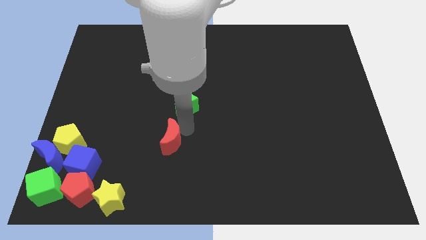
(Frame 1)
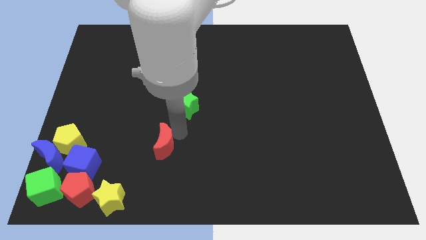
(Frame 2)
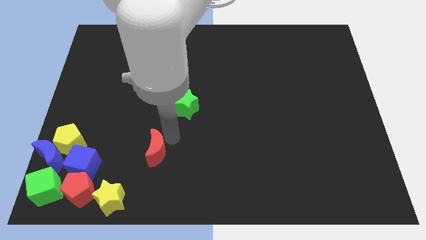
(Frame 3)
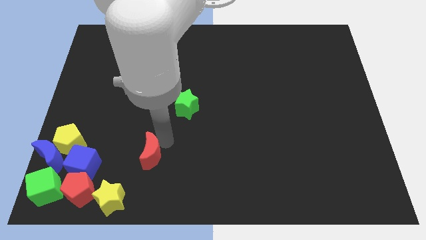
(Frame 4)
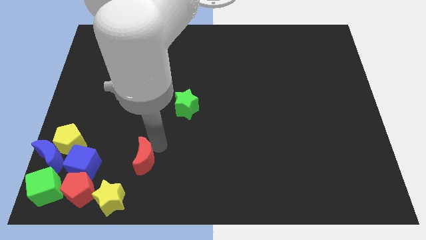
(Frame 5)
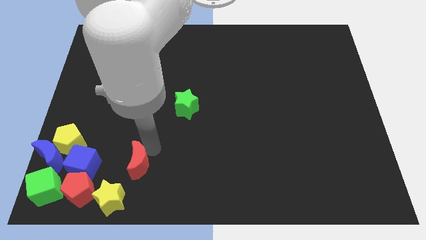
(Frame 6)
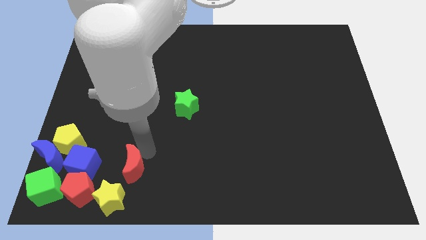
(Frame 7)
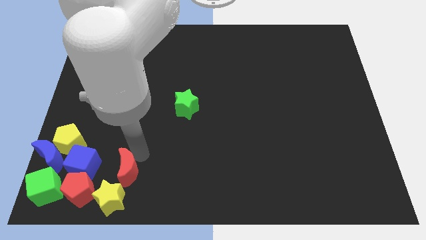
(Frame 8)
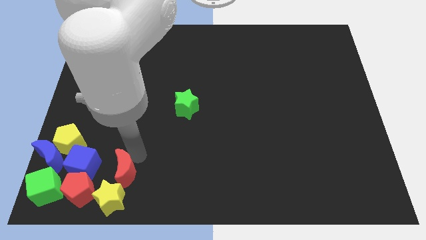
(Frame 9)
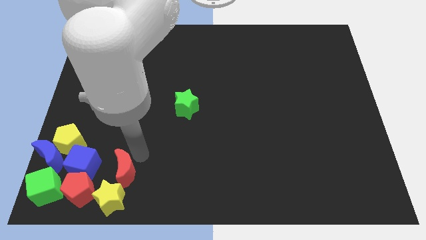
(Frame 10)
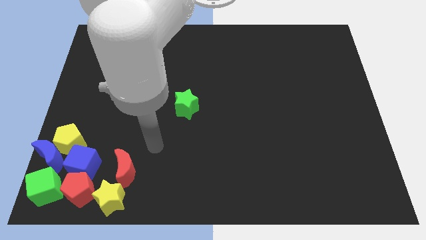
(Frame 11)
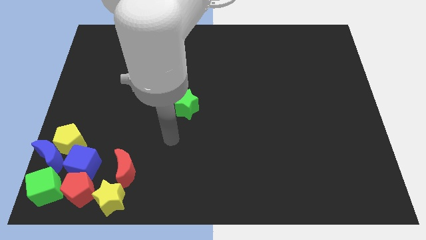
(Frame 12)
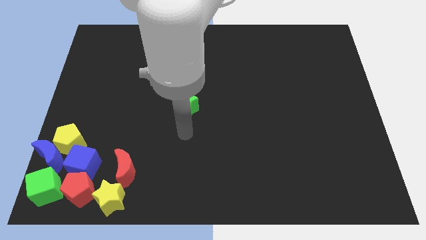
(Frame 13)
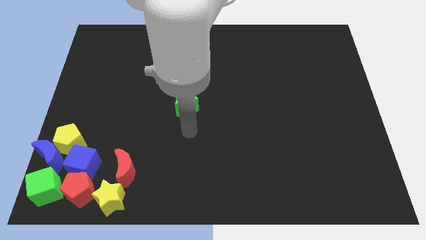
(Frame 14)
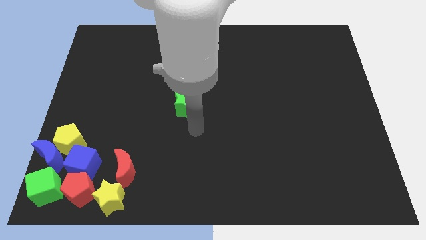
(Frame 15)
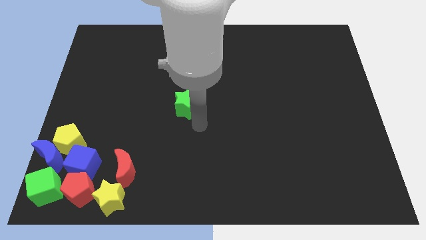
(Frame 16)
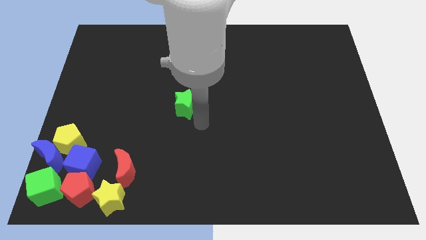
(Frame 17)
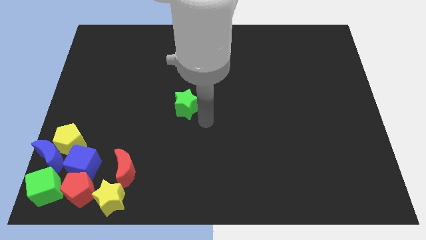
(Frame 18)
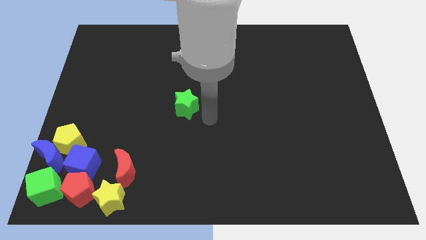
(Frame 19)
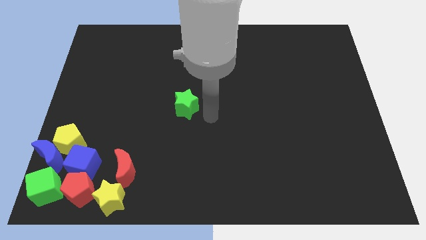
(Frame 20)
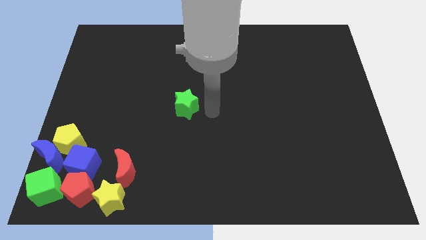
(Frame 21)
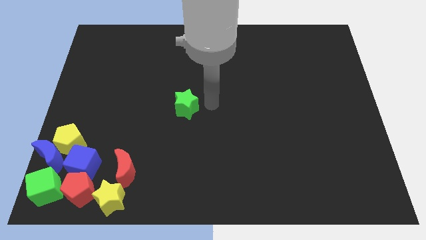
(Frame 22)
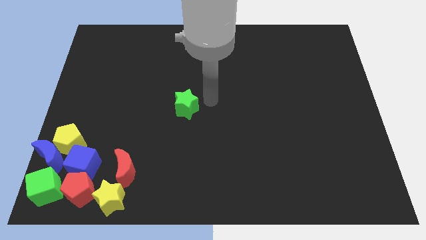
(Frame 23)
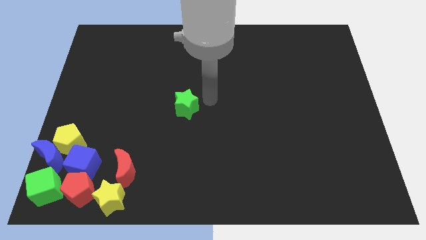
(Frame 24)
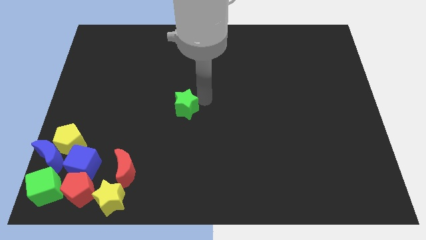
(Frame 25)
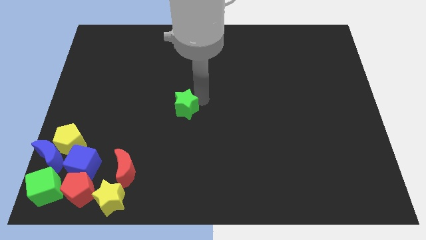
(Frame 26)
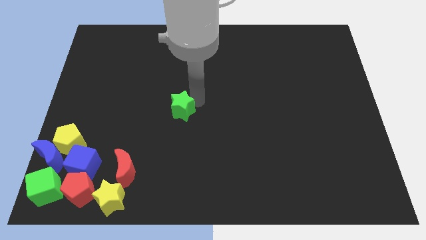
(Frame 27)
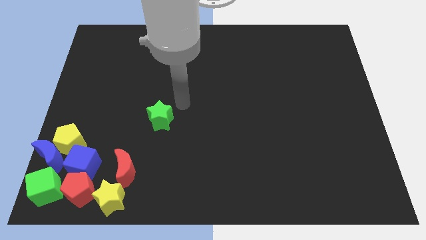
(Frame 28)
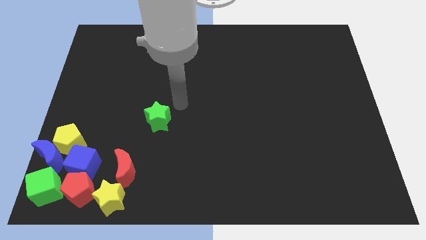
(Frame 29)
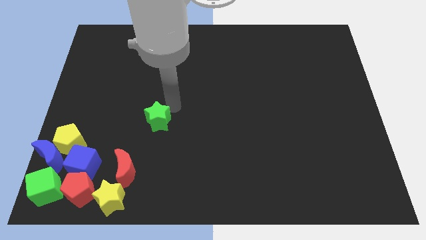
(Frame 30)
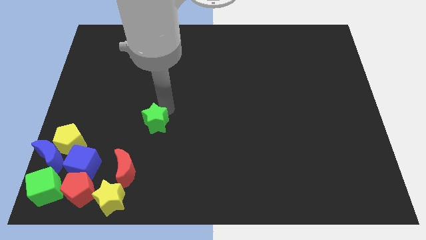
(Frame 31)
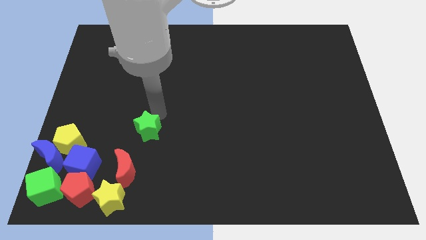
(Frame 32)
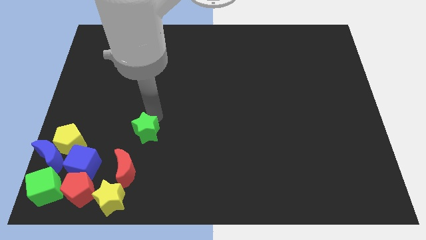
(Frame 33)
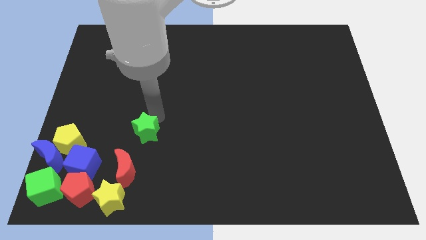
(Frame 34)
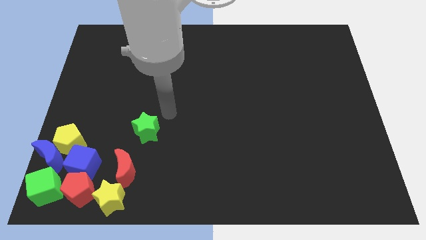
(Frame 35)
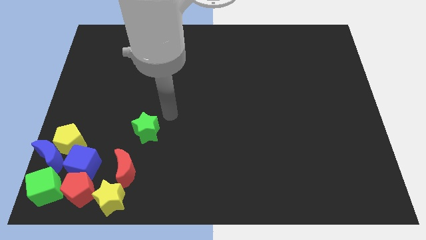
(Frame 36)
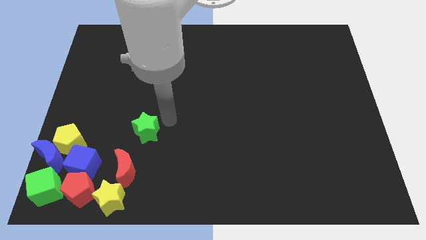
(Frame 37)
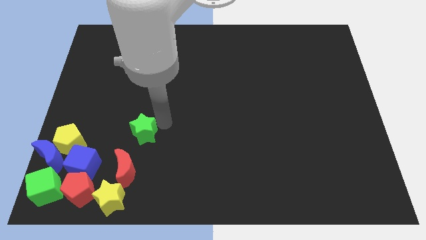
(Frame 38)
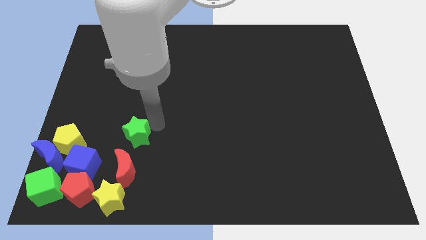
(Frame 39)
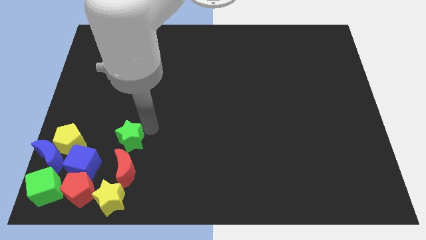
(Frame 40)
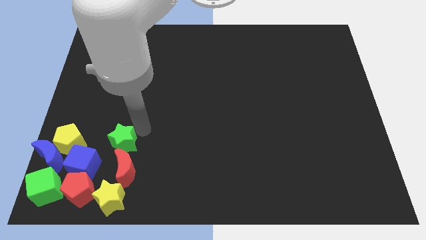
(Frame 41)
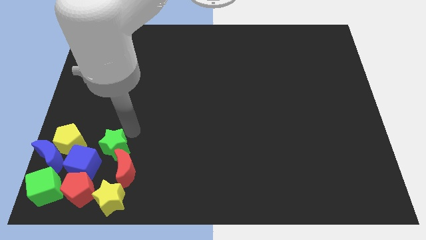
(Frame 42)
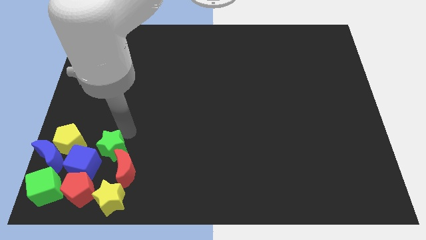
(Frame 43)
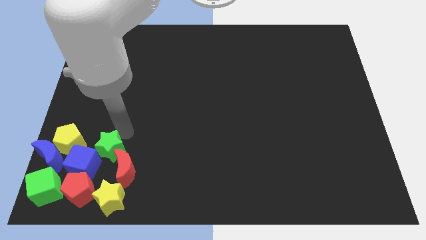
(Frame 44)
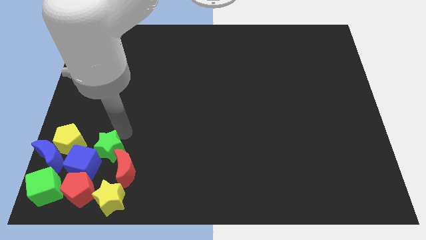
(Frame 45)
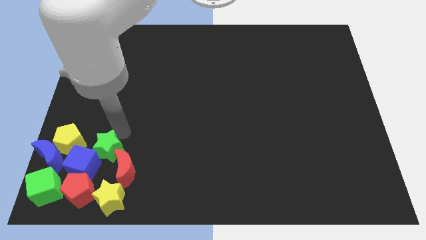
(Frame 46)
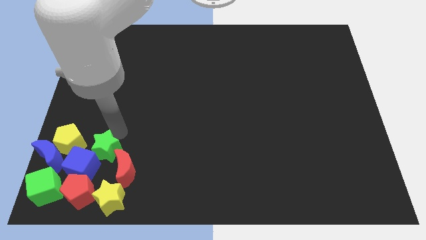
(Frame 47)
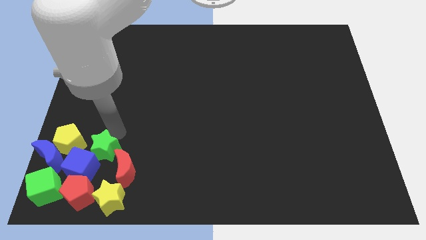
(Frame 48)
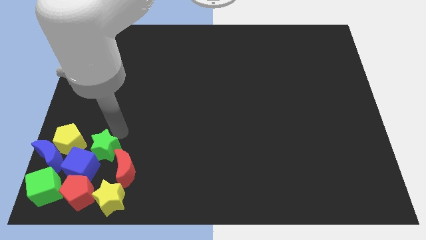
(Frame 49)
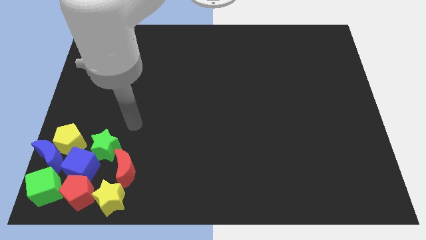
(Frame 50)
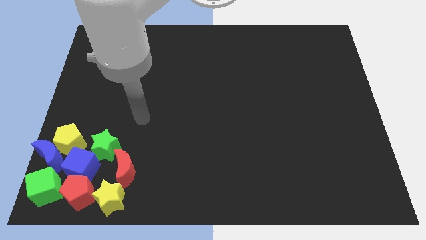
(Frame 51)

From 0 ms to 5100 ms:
move the green star and red moon close to the group of objects

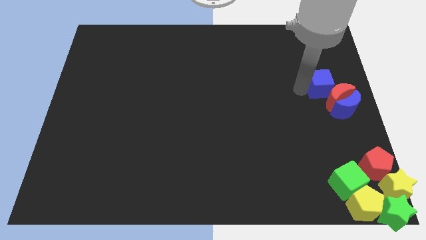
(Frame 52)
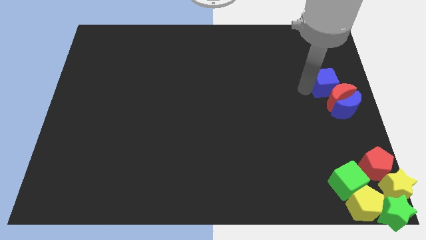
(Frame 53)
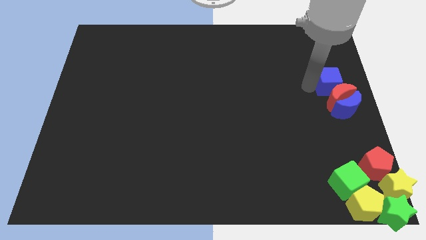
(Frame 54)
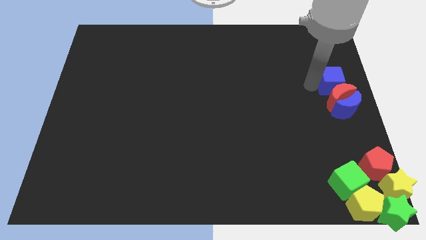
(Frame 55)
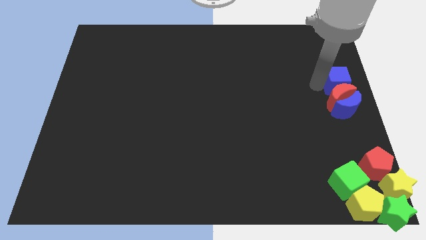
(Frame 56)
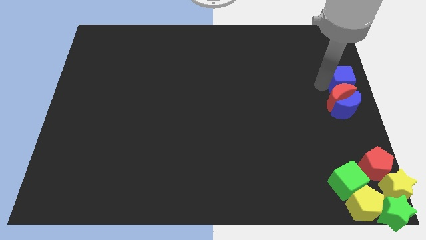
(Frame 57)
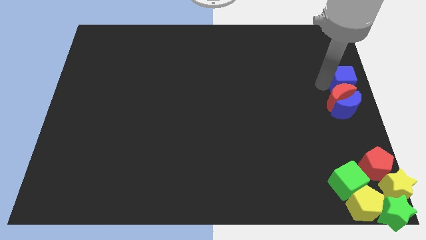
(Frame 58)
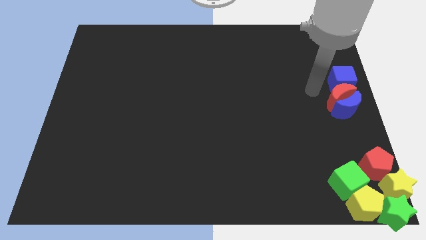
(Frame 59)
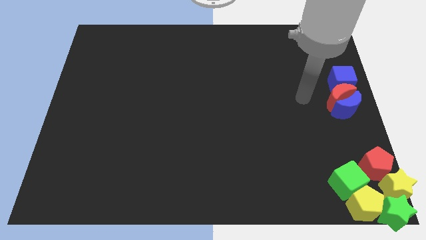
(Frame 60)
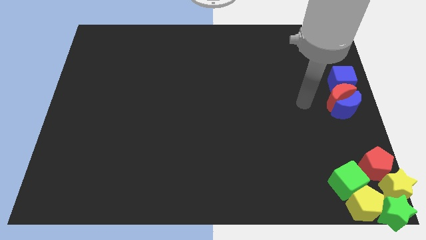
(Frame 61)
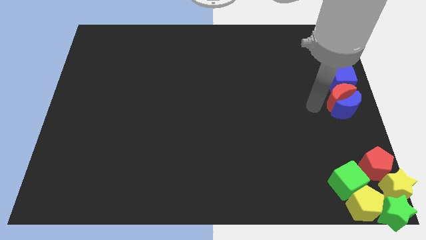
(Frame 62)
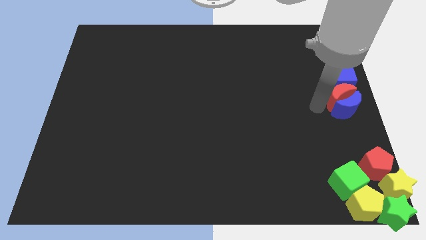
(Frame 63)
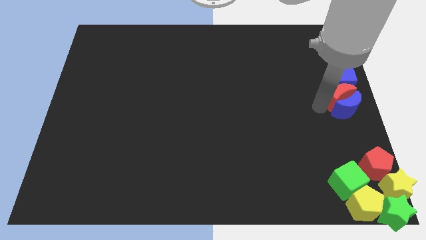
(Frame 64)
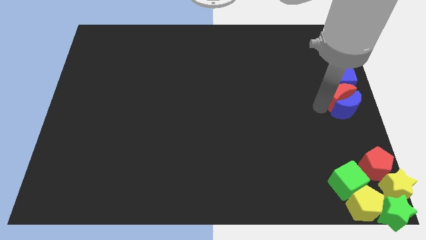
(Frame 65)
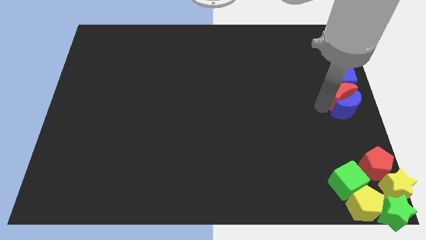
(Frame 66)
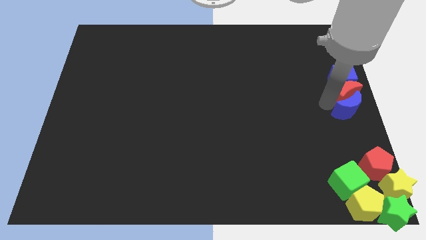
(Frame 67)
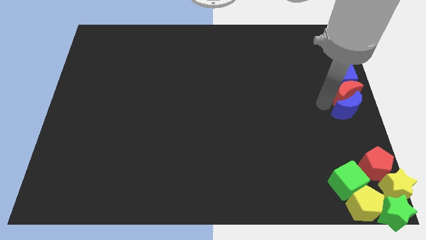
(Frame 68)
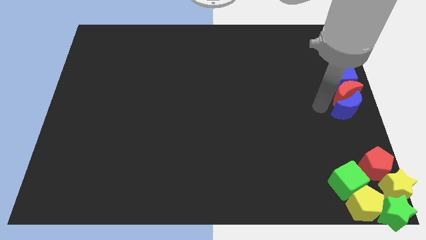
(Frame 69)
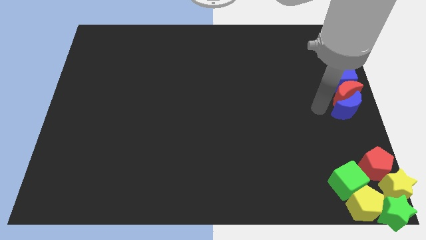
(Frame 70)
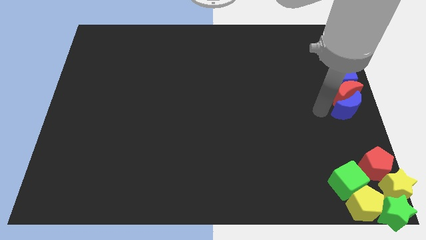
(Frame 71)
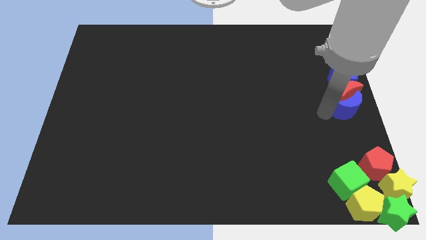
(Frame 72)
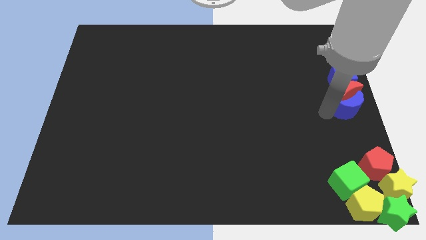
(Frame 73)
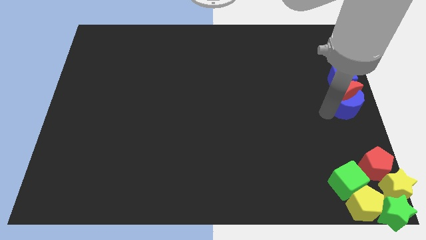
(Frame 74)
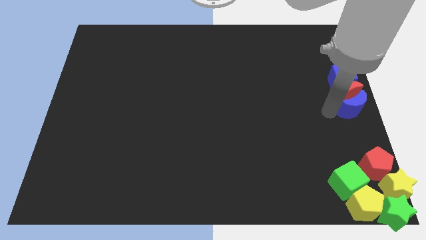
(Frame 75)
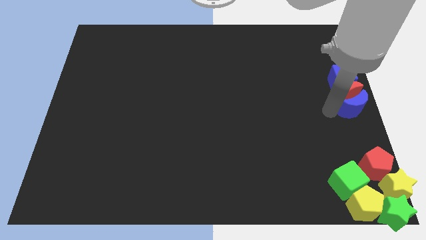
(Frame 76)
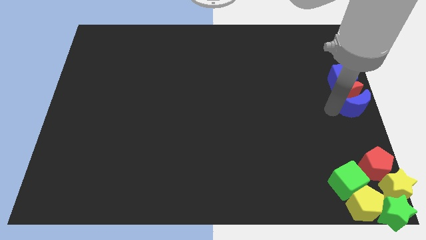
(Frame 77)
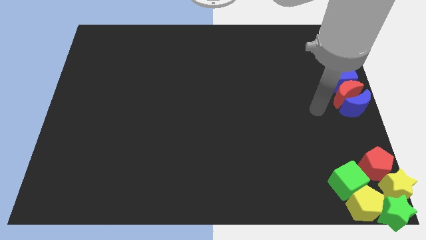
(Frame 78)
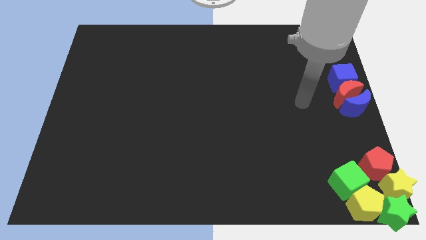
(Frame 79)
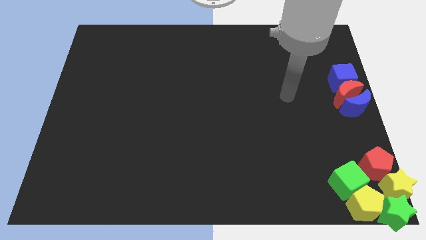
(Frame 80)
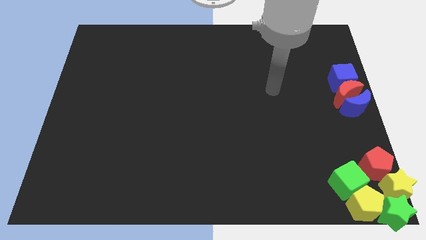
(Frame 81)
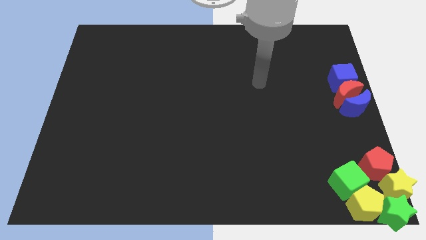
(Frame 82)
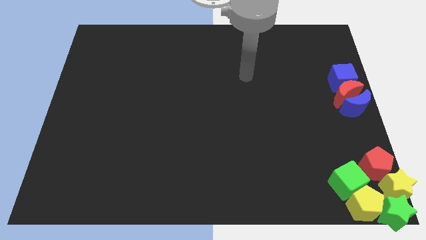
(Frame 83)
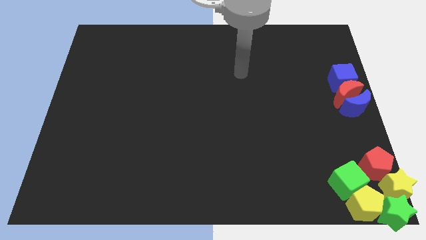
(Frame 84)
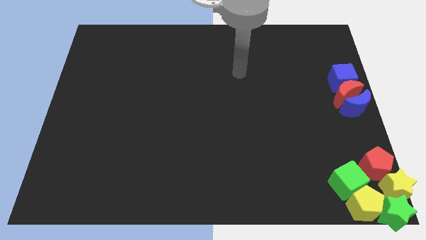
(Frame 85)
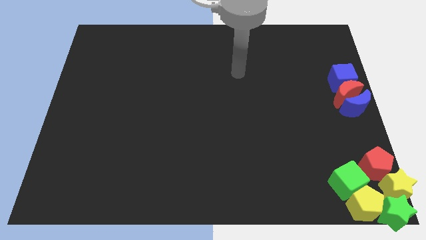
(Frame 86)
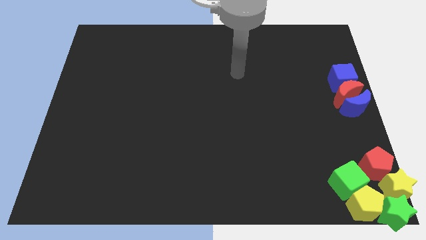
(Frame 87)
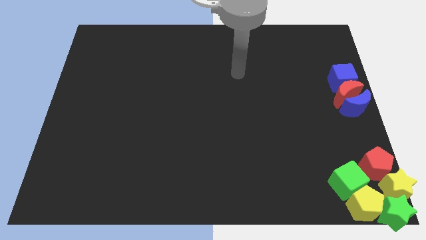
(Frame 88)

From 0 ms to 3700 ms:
slide up the red blue moon and cube
